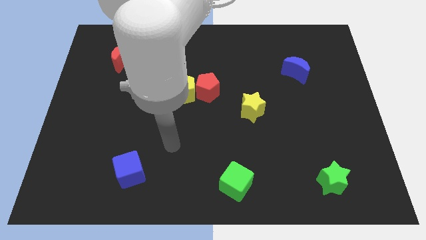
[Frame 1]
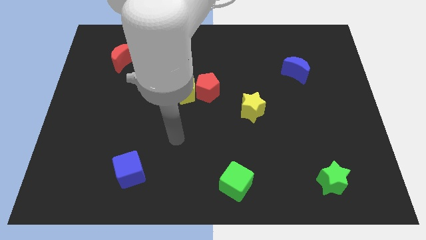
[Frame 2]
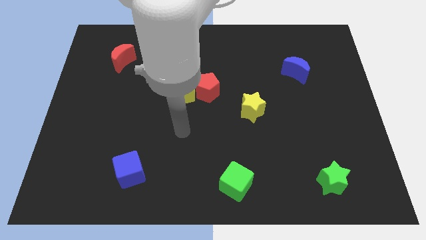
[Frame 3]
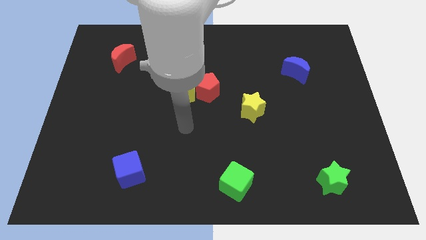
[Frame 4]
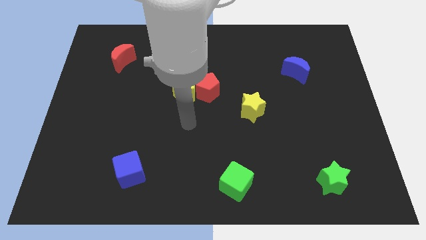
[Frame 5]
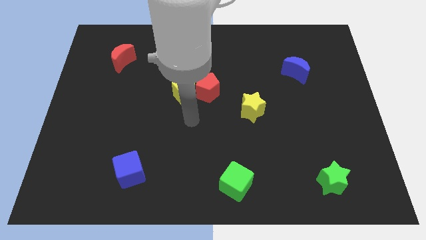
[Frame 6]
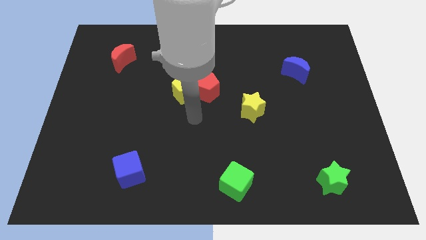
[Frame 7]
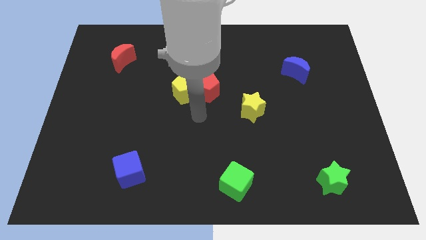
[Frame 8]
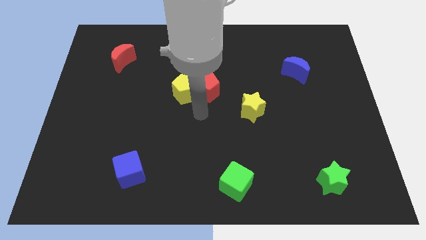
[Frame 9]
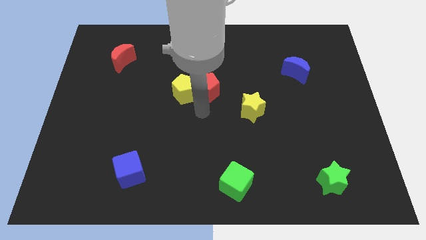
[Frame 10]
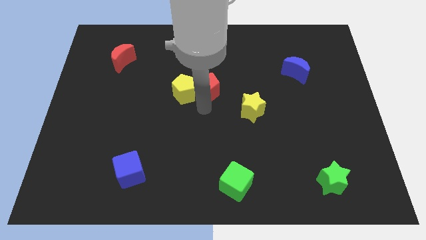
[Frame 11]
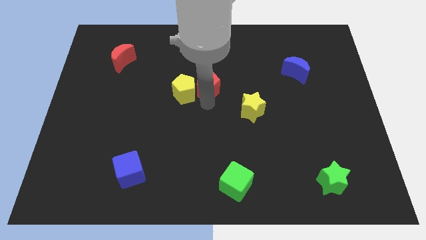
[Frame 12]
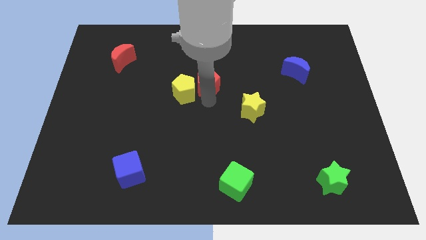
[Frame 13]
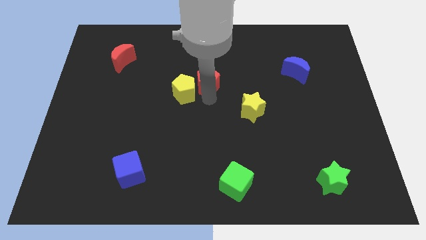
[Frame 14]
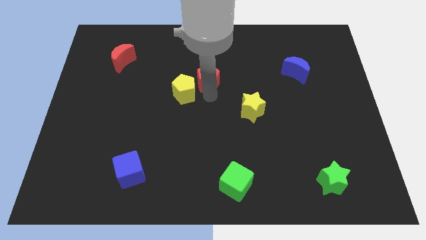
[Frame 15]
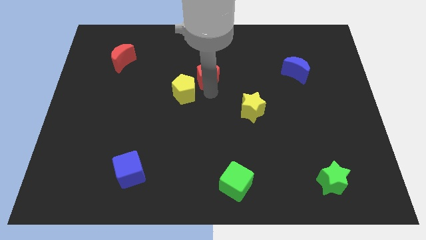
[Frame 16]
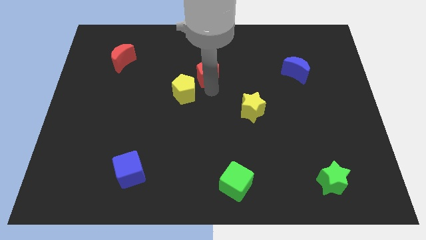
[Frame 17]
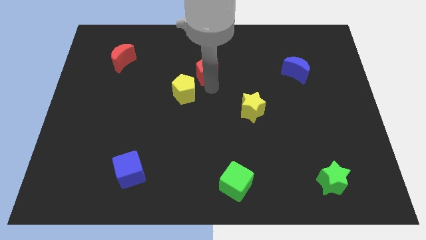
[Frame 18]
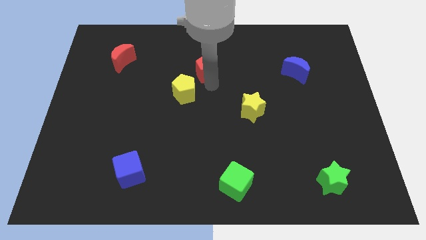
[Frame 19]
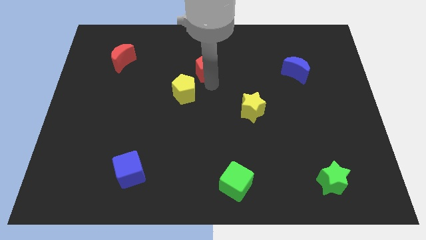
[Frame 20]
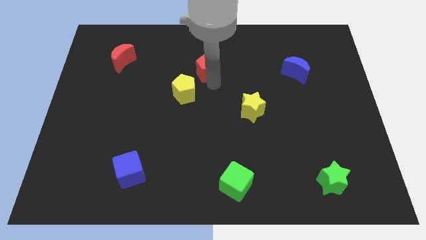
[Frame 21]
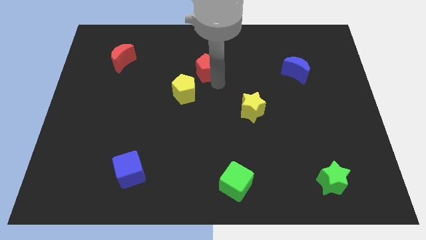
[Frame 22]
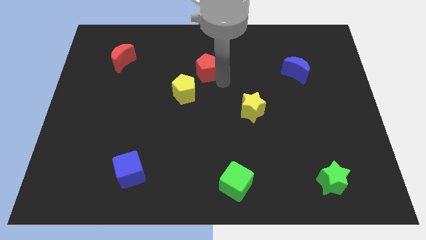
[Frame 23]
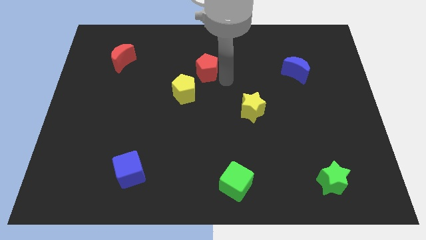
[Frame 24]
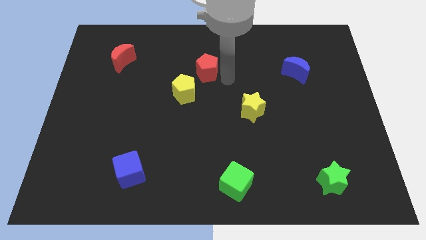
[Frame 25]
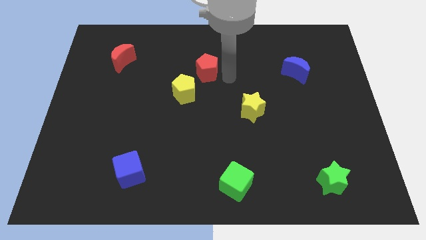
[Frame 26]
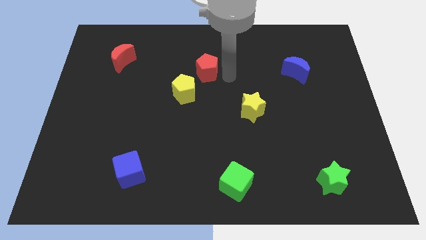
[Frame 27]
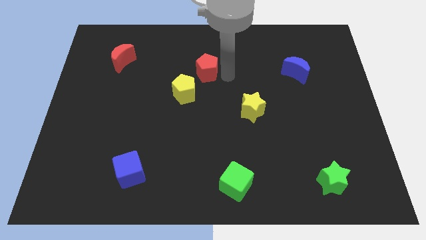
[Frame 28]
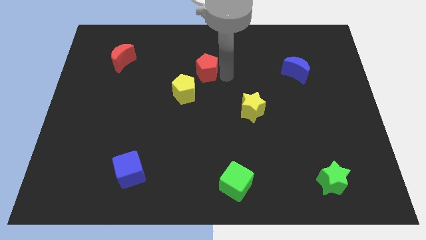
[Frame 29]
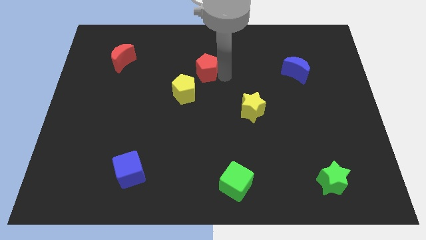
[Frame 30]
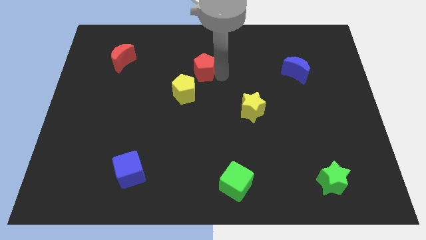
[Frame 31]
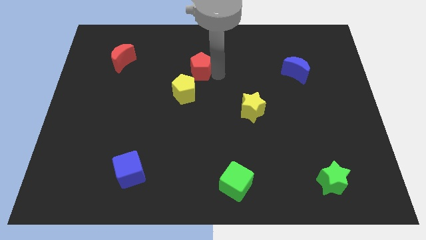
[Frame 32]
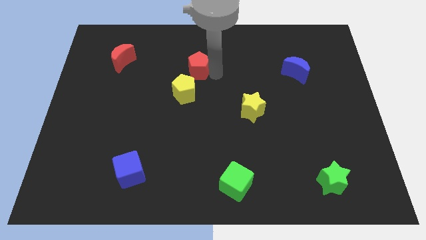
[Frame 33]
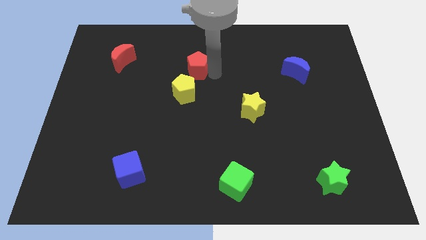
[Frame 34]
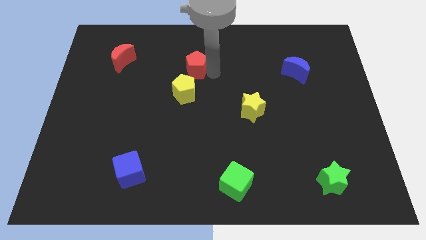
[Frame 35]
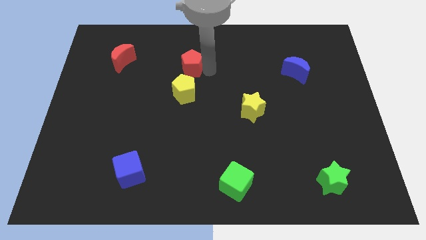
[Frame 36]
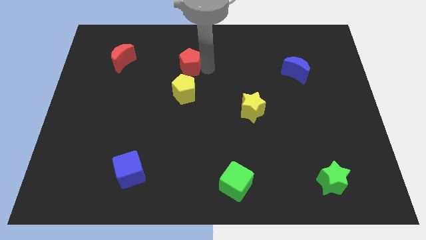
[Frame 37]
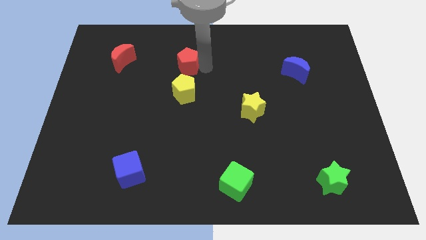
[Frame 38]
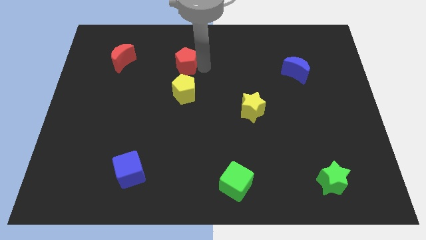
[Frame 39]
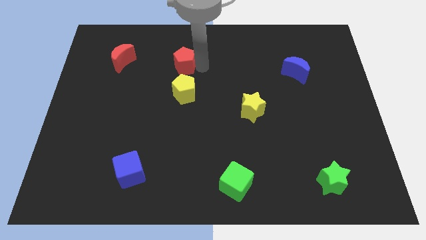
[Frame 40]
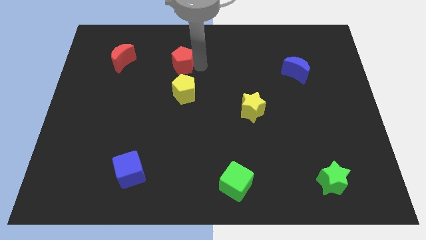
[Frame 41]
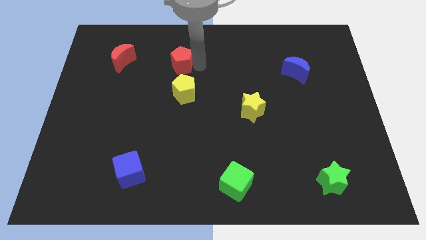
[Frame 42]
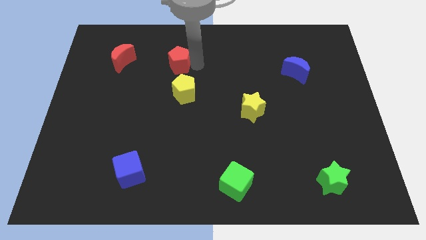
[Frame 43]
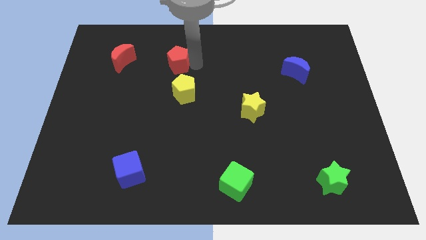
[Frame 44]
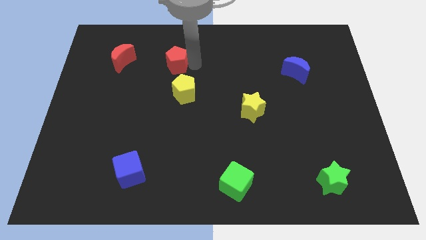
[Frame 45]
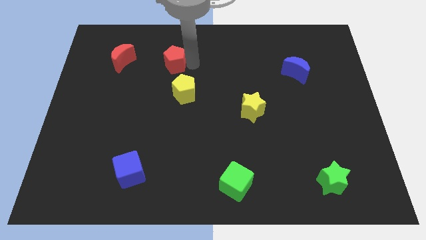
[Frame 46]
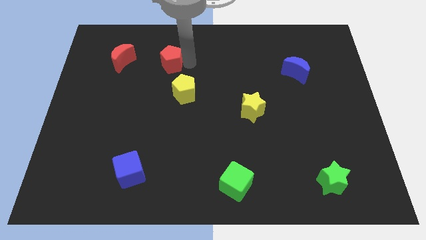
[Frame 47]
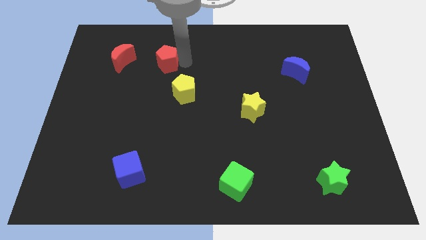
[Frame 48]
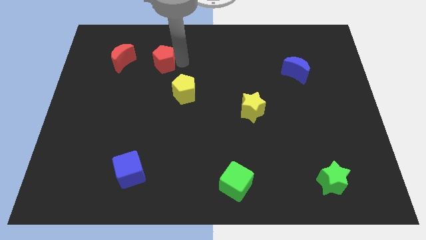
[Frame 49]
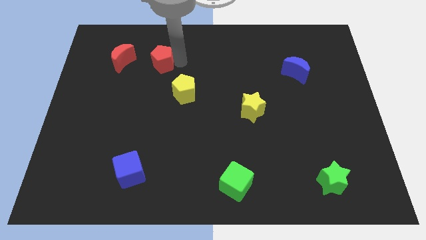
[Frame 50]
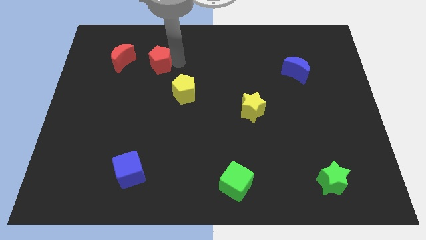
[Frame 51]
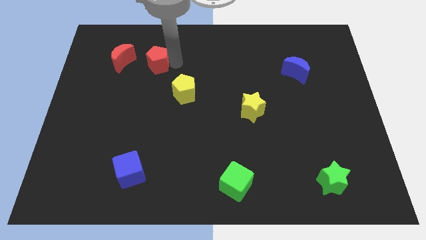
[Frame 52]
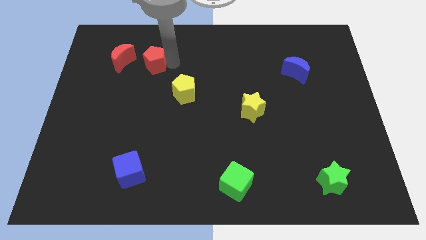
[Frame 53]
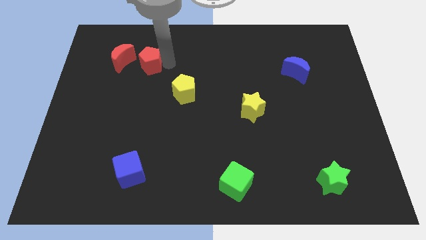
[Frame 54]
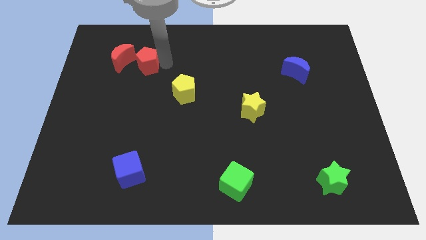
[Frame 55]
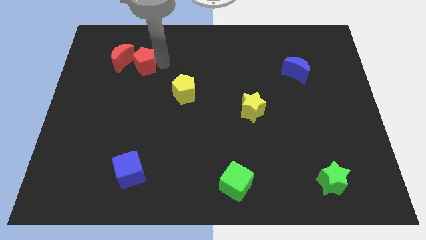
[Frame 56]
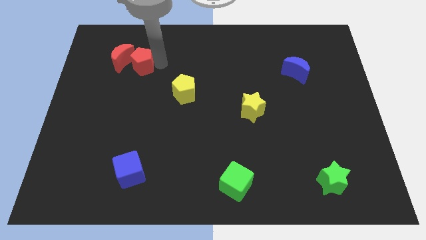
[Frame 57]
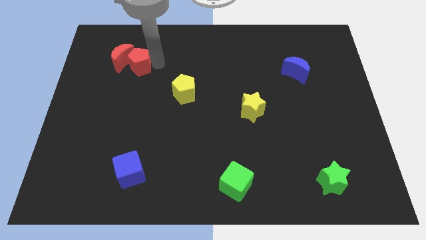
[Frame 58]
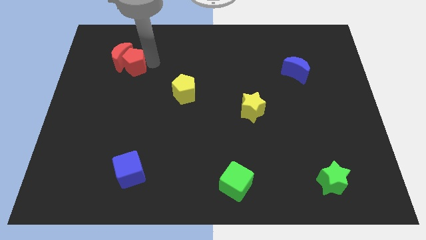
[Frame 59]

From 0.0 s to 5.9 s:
push the red pentagon to the red moon

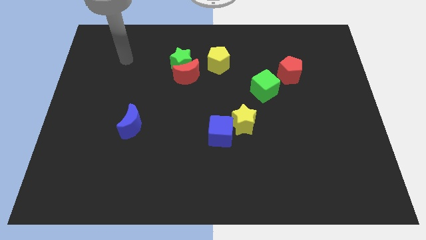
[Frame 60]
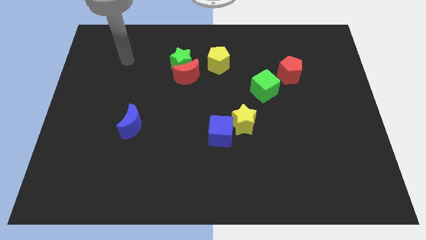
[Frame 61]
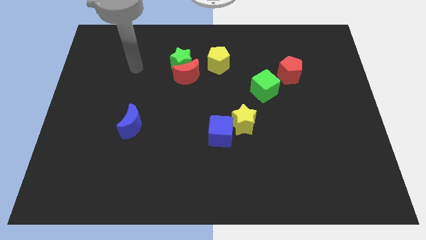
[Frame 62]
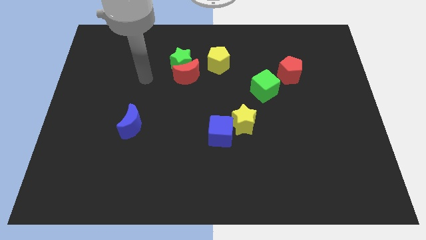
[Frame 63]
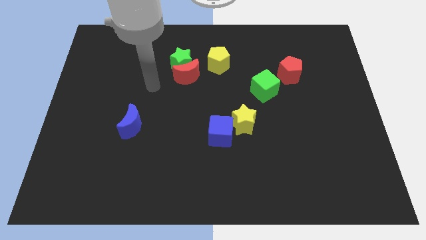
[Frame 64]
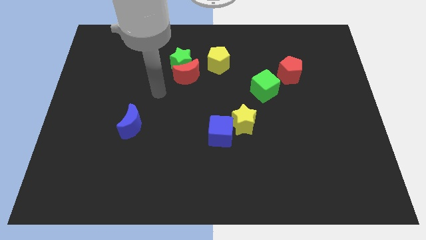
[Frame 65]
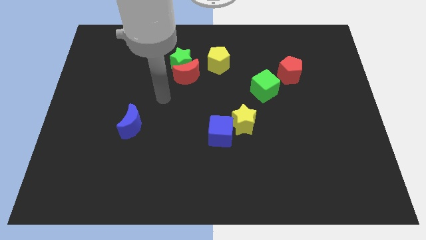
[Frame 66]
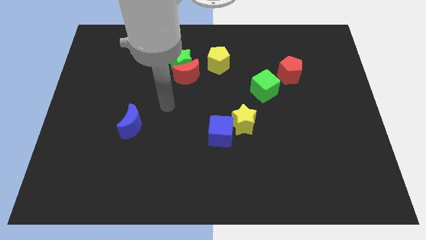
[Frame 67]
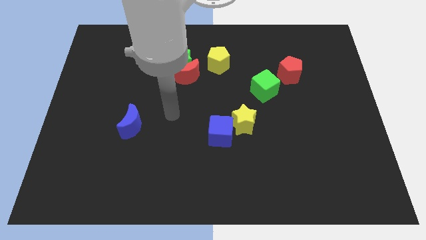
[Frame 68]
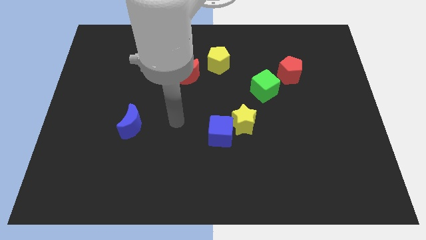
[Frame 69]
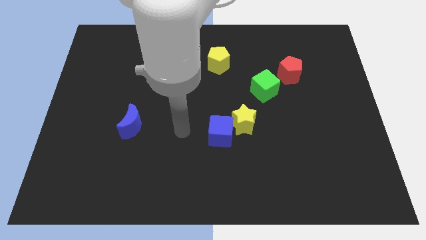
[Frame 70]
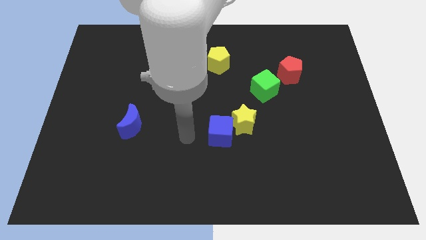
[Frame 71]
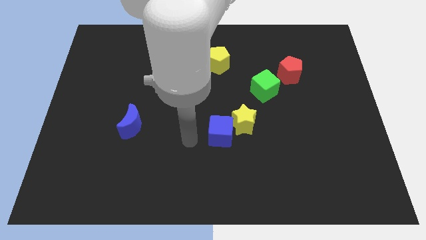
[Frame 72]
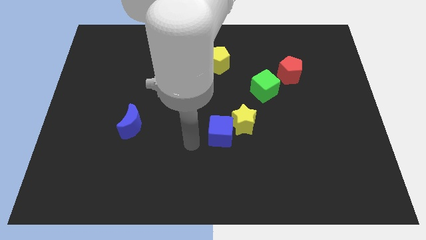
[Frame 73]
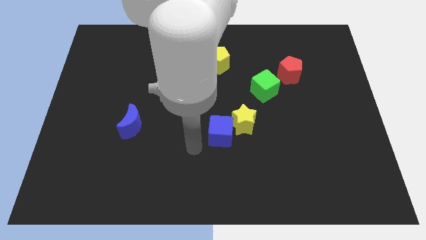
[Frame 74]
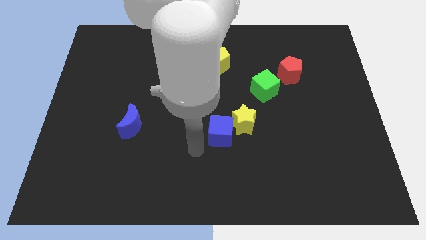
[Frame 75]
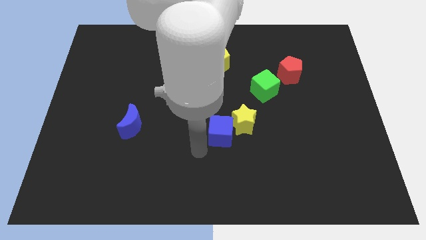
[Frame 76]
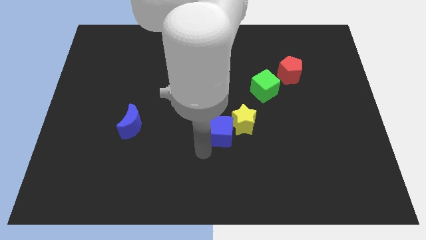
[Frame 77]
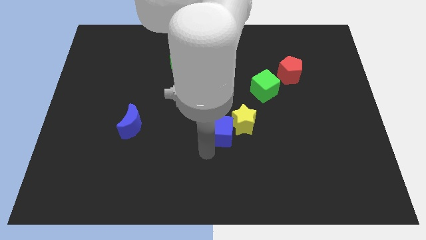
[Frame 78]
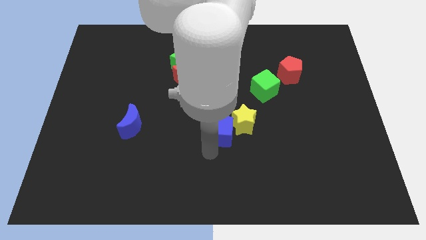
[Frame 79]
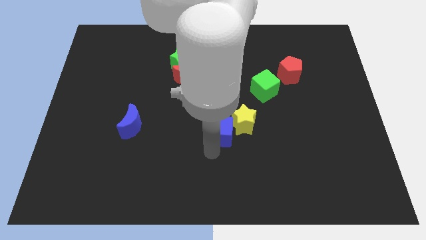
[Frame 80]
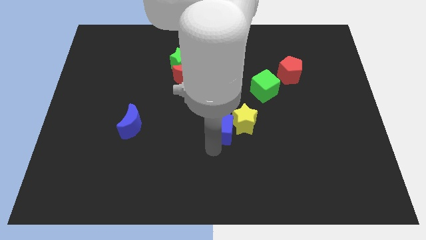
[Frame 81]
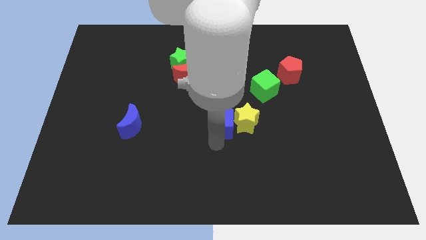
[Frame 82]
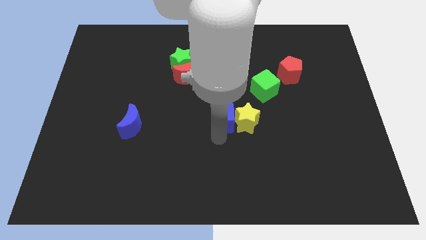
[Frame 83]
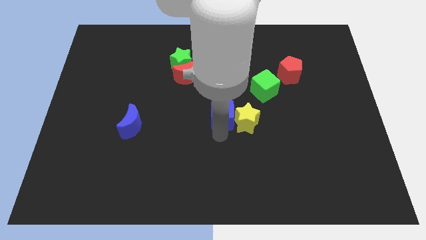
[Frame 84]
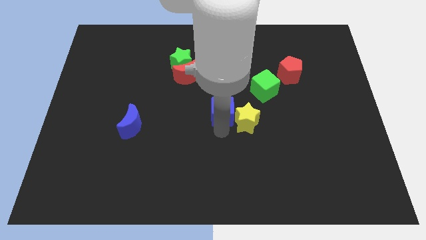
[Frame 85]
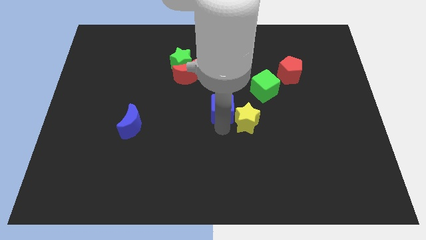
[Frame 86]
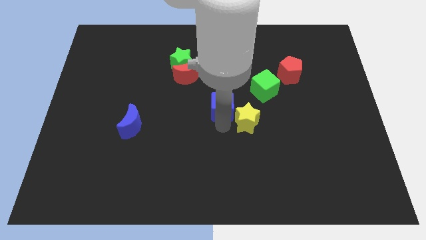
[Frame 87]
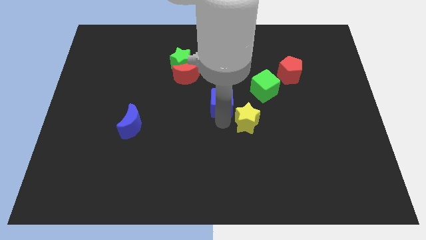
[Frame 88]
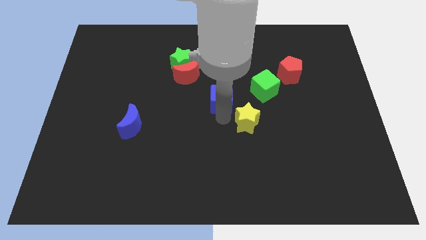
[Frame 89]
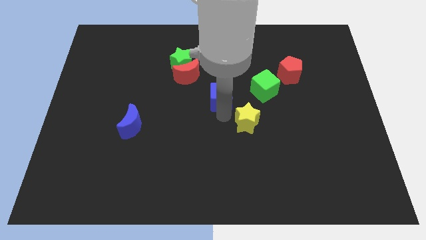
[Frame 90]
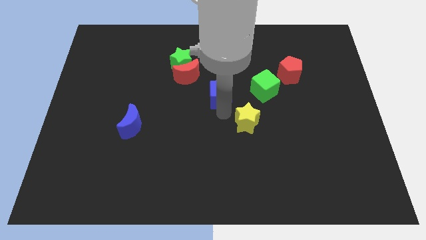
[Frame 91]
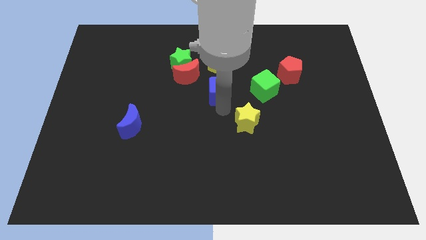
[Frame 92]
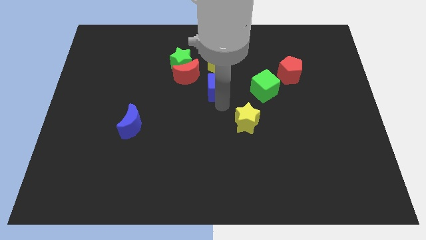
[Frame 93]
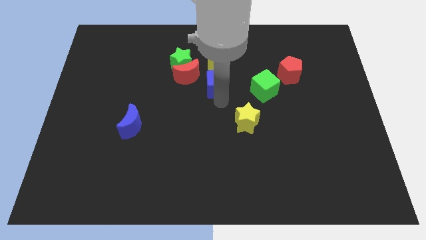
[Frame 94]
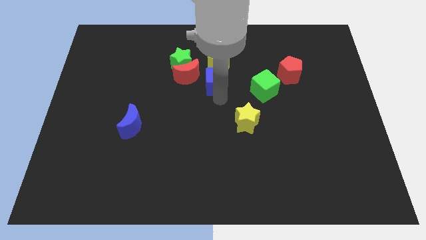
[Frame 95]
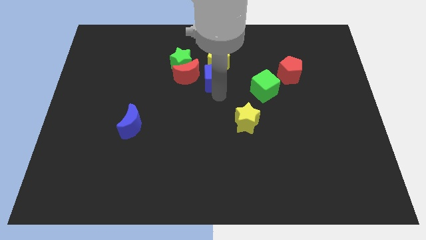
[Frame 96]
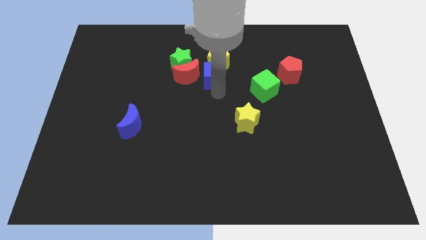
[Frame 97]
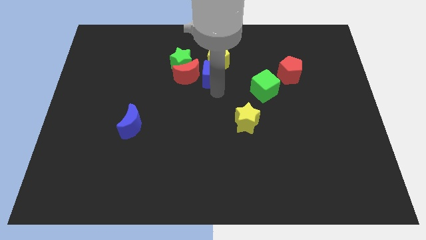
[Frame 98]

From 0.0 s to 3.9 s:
put the blue cube to the yellow pentagon
